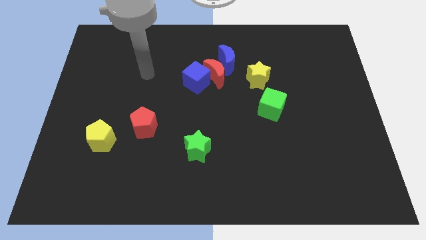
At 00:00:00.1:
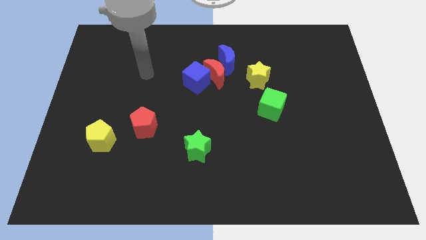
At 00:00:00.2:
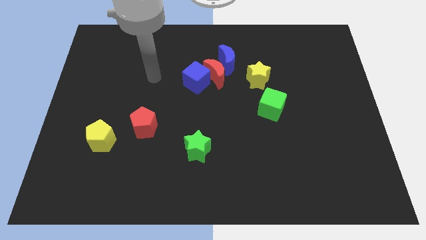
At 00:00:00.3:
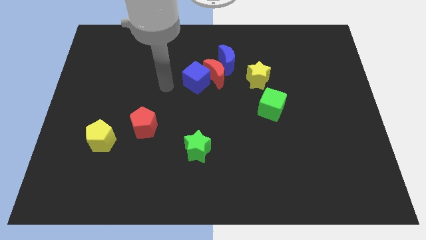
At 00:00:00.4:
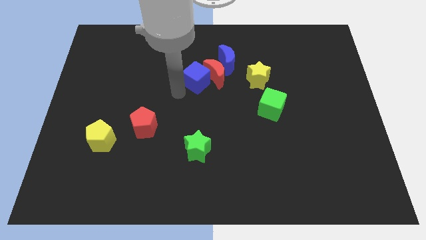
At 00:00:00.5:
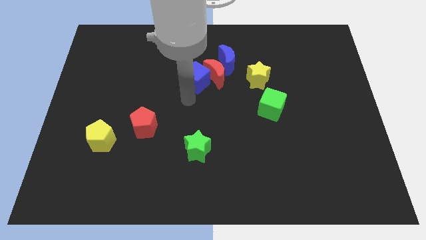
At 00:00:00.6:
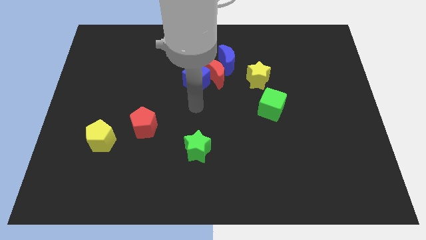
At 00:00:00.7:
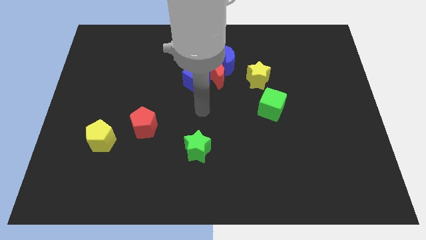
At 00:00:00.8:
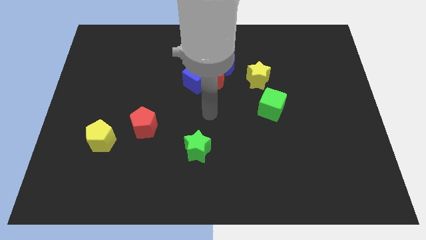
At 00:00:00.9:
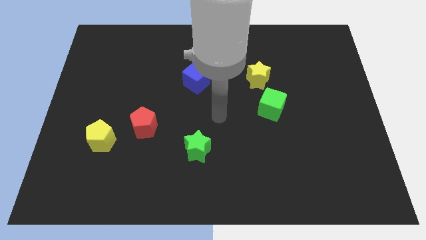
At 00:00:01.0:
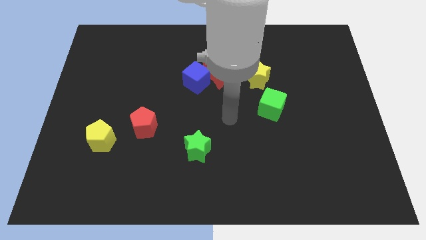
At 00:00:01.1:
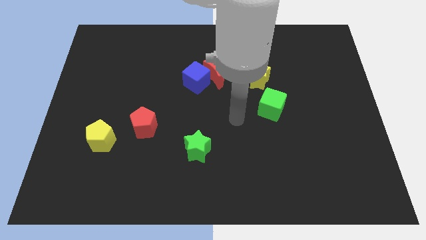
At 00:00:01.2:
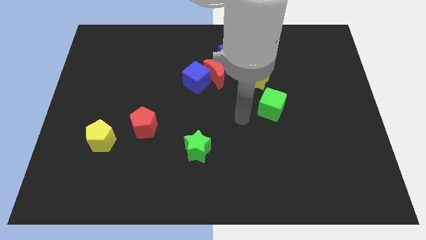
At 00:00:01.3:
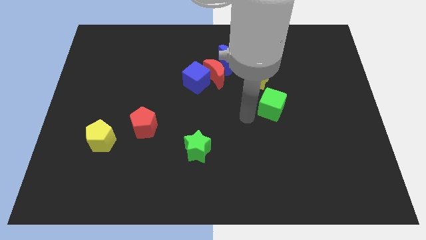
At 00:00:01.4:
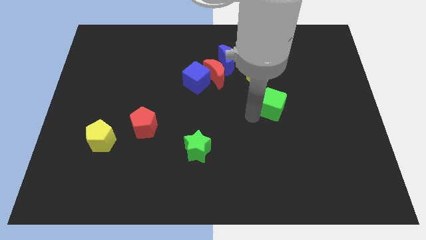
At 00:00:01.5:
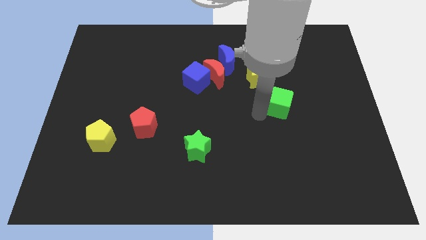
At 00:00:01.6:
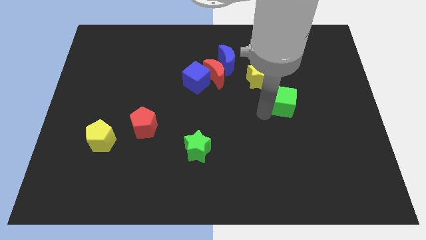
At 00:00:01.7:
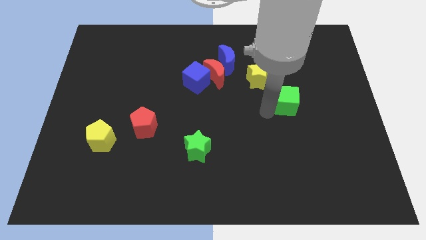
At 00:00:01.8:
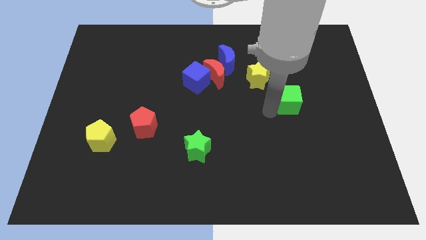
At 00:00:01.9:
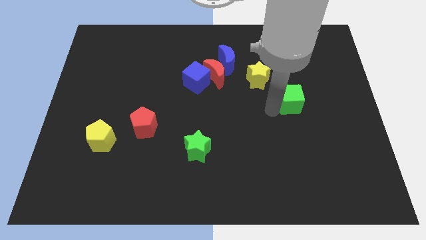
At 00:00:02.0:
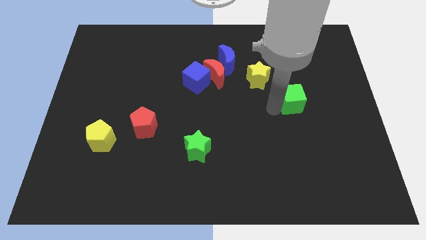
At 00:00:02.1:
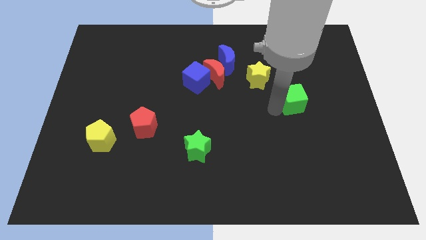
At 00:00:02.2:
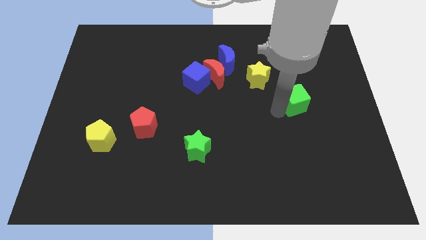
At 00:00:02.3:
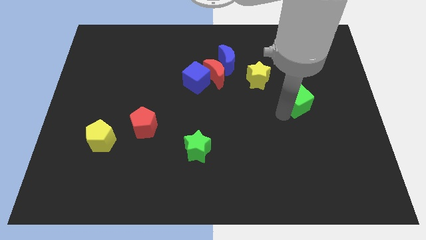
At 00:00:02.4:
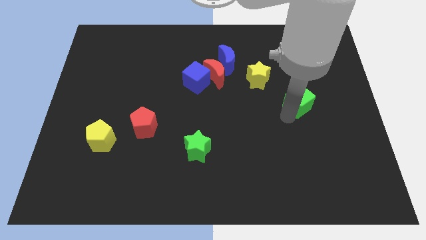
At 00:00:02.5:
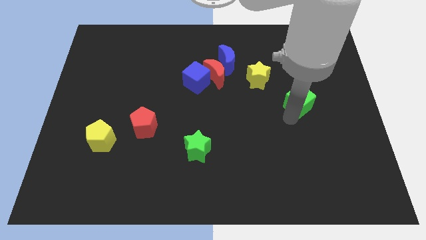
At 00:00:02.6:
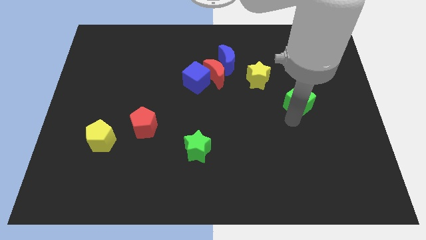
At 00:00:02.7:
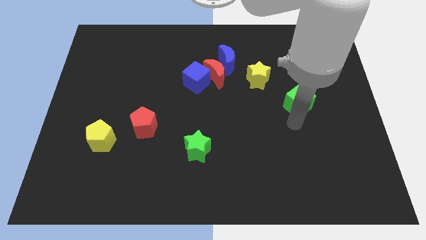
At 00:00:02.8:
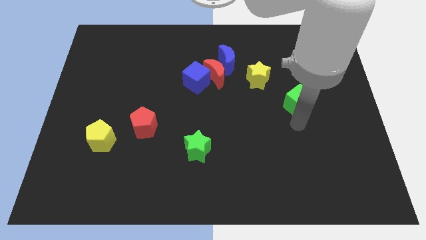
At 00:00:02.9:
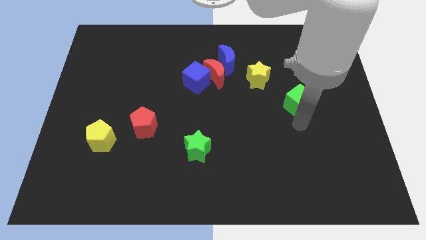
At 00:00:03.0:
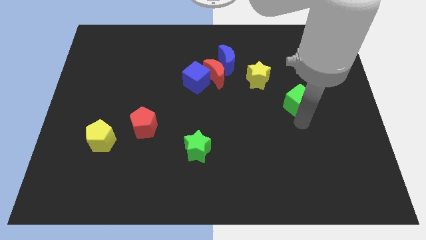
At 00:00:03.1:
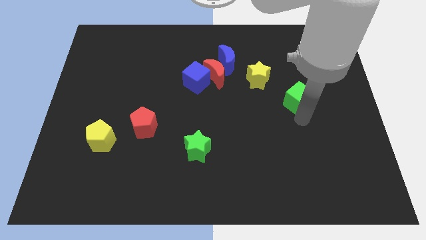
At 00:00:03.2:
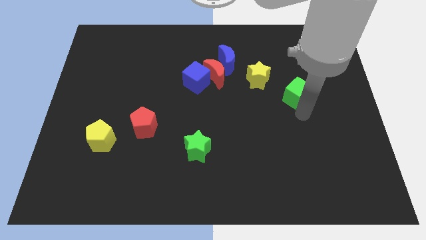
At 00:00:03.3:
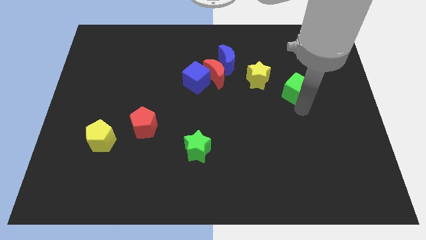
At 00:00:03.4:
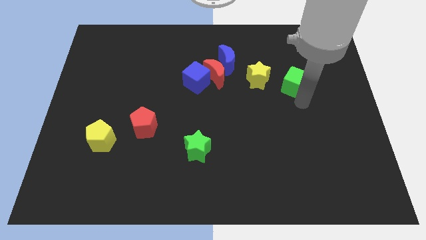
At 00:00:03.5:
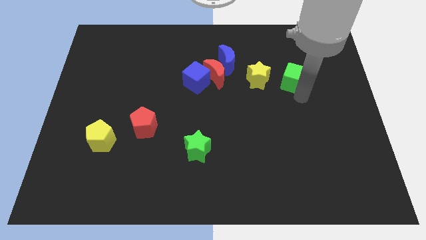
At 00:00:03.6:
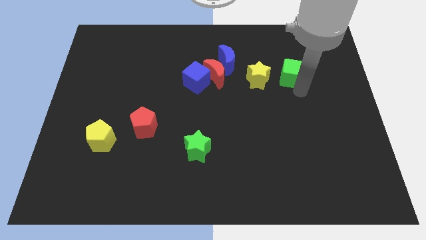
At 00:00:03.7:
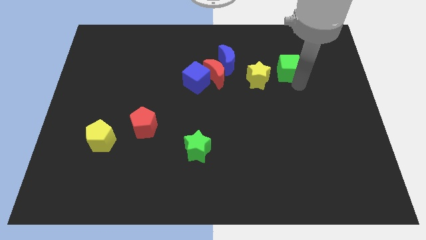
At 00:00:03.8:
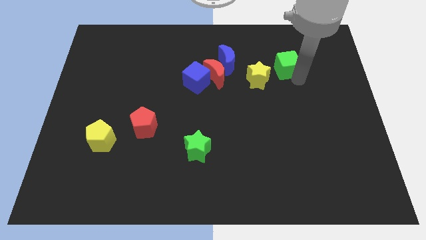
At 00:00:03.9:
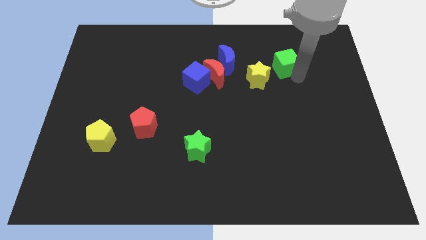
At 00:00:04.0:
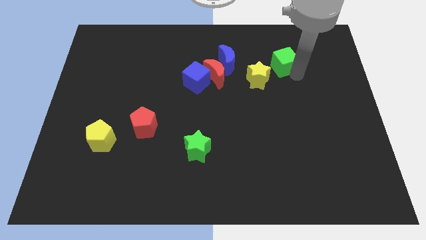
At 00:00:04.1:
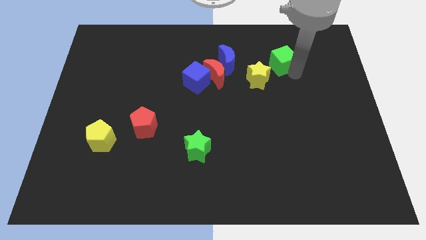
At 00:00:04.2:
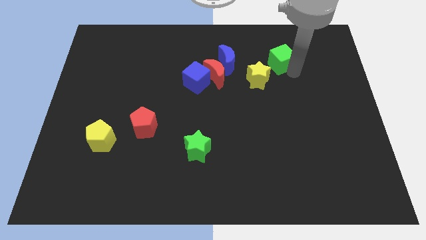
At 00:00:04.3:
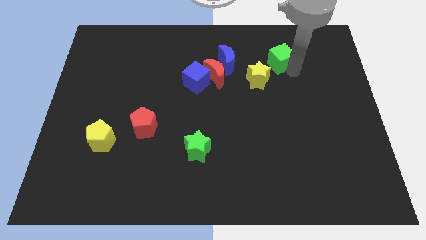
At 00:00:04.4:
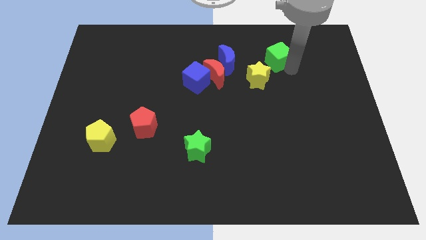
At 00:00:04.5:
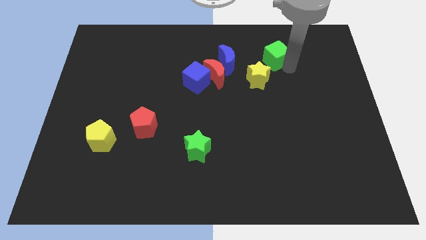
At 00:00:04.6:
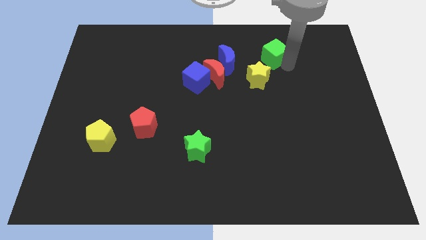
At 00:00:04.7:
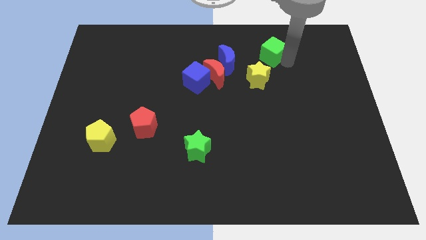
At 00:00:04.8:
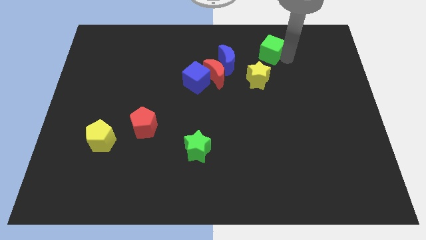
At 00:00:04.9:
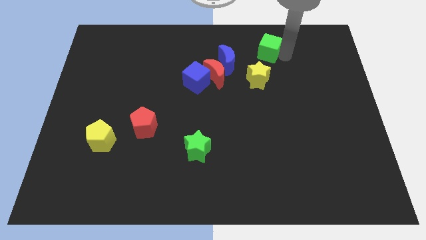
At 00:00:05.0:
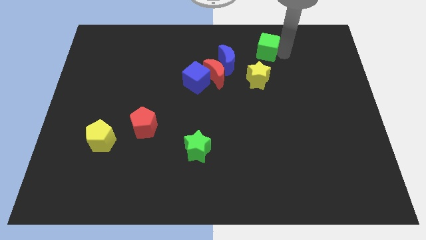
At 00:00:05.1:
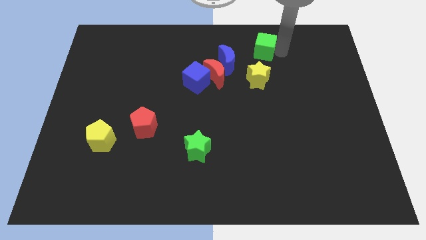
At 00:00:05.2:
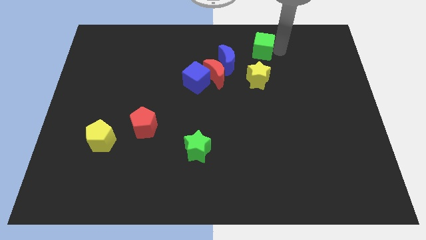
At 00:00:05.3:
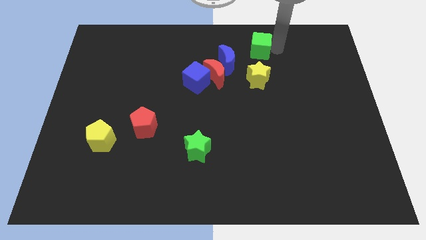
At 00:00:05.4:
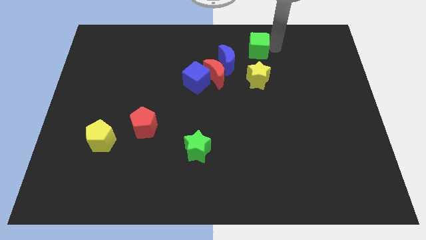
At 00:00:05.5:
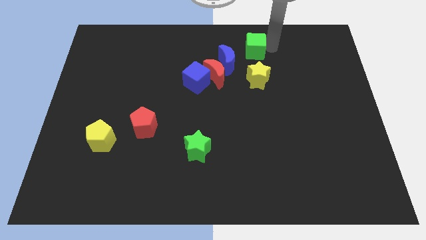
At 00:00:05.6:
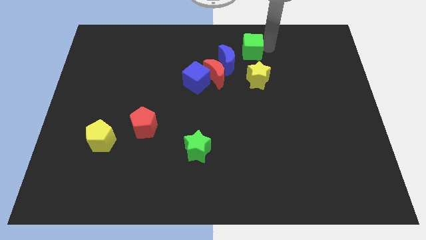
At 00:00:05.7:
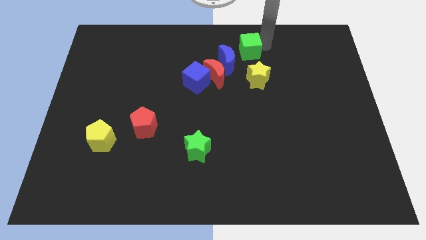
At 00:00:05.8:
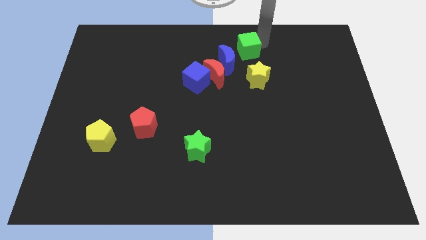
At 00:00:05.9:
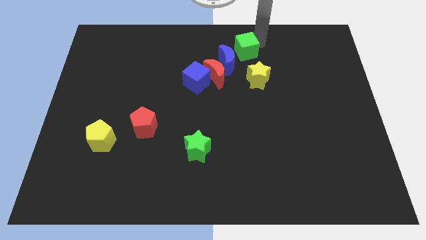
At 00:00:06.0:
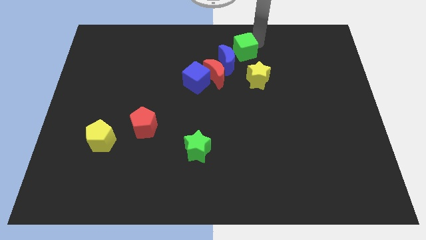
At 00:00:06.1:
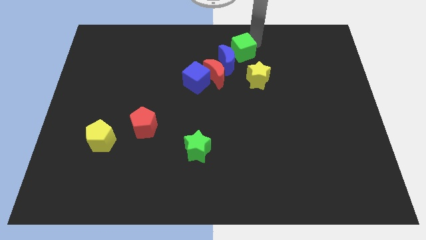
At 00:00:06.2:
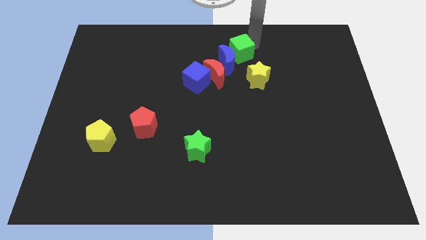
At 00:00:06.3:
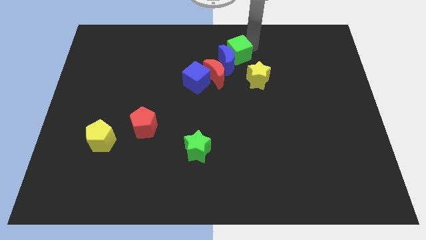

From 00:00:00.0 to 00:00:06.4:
move the green cube to the blue moon

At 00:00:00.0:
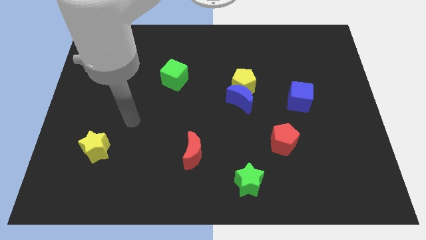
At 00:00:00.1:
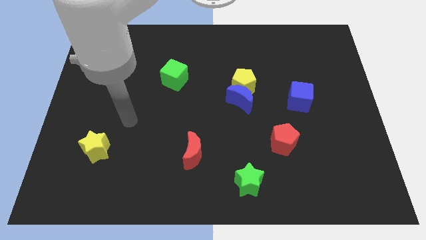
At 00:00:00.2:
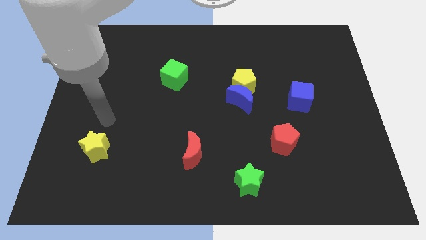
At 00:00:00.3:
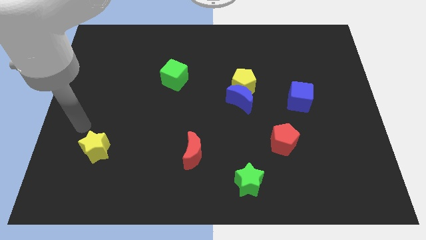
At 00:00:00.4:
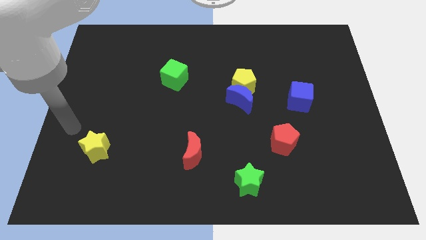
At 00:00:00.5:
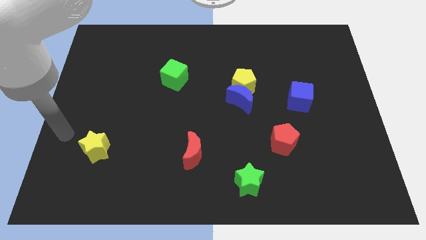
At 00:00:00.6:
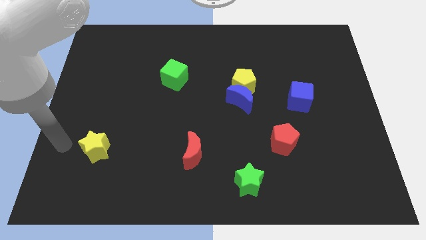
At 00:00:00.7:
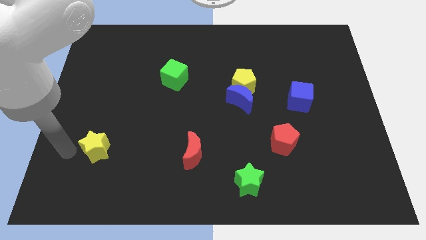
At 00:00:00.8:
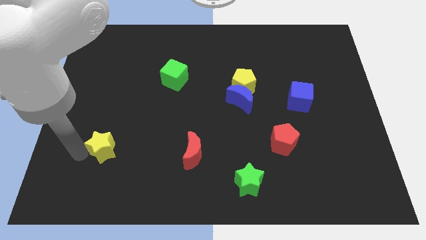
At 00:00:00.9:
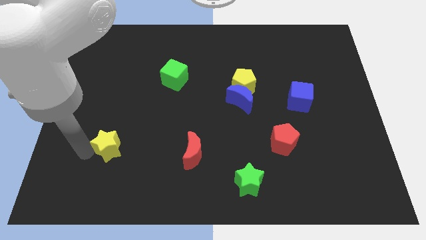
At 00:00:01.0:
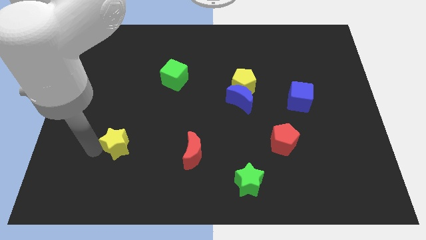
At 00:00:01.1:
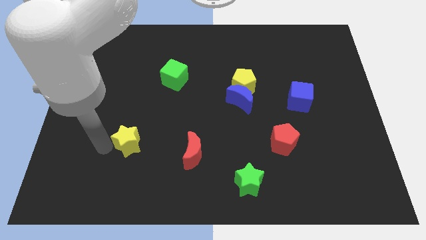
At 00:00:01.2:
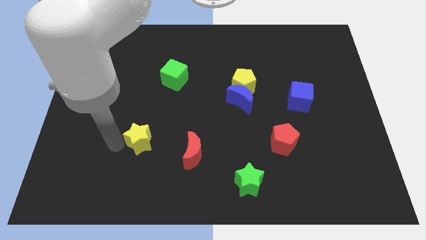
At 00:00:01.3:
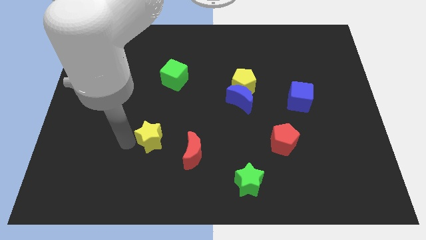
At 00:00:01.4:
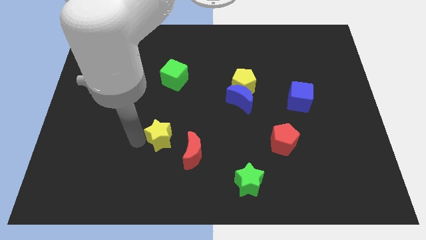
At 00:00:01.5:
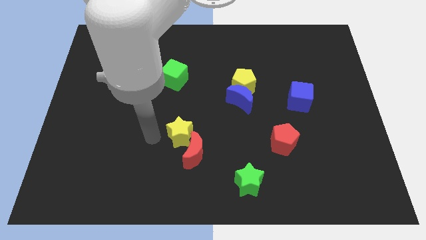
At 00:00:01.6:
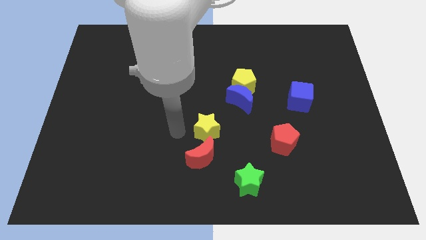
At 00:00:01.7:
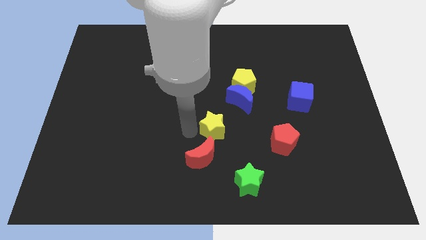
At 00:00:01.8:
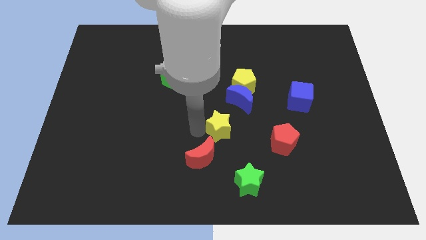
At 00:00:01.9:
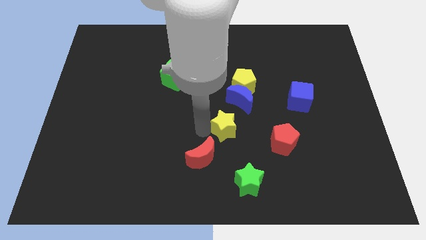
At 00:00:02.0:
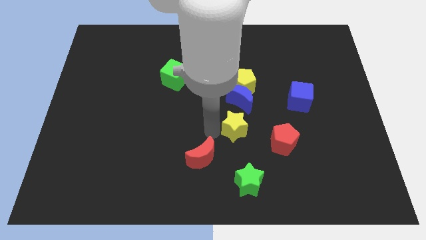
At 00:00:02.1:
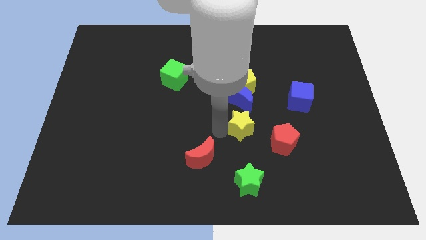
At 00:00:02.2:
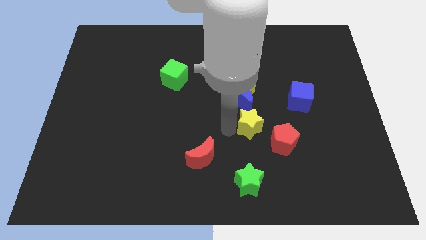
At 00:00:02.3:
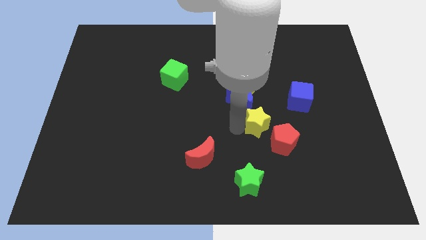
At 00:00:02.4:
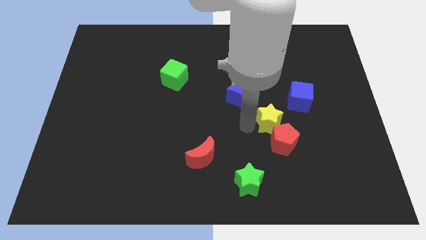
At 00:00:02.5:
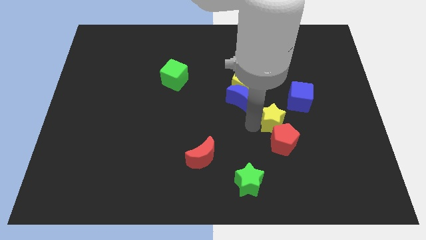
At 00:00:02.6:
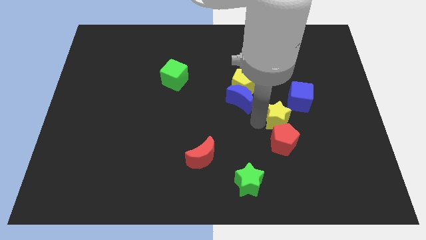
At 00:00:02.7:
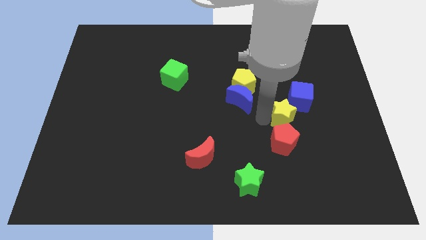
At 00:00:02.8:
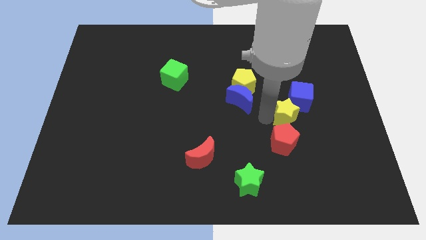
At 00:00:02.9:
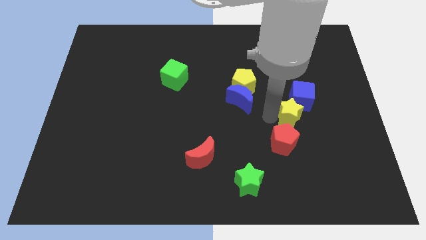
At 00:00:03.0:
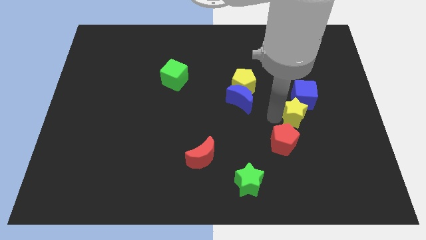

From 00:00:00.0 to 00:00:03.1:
slide the yellow star to the blue cube
